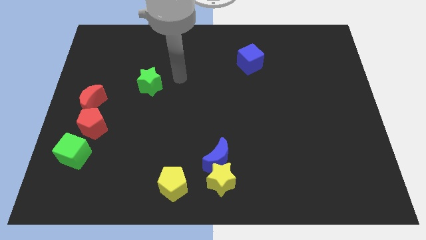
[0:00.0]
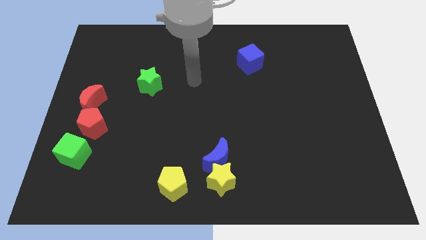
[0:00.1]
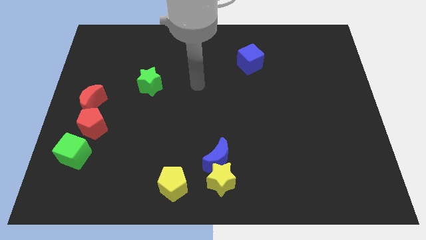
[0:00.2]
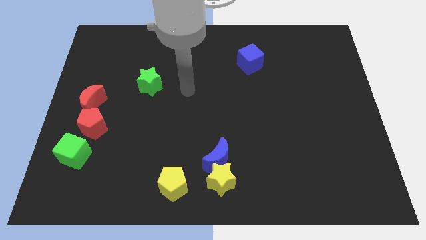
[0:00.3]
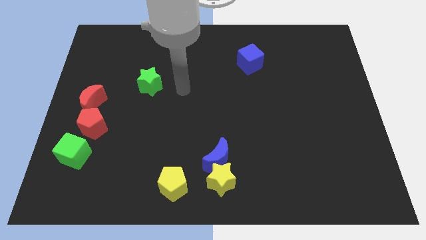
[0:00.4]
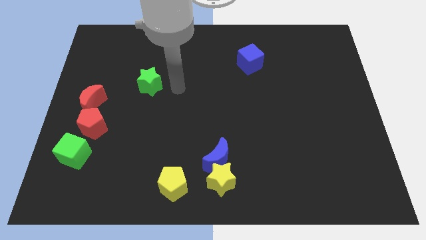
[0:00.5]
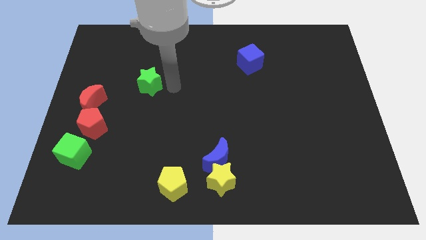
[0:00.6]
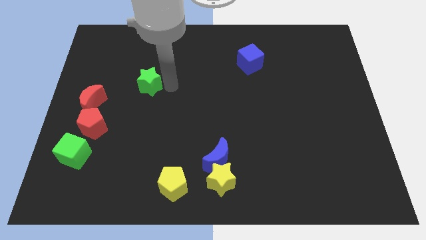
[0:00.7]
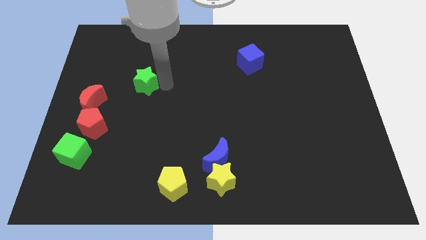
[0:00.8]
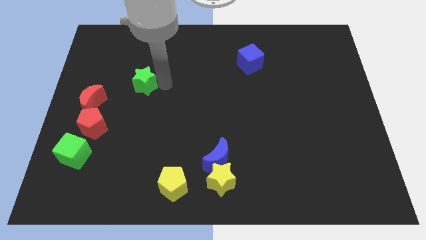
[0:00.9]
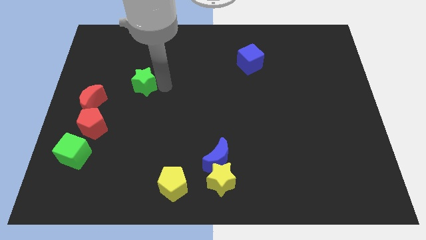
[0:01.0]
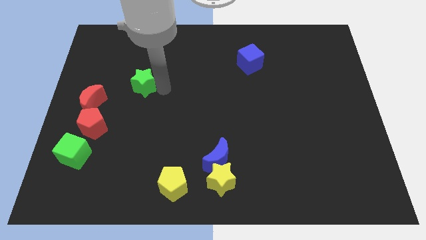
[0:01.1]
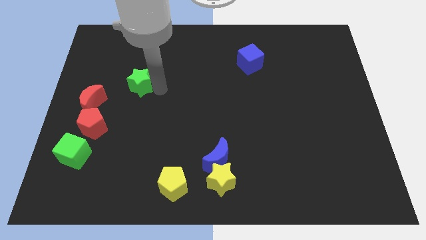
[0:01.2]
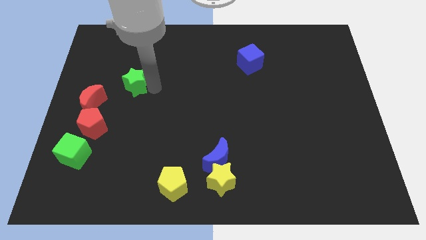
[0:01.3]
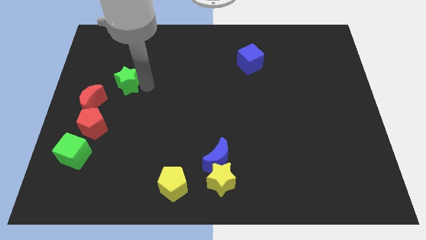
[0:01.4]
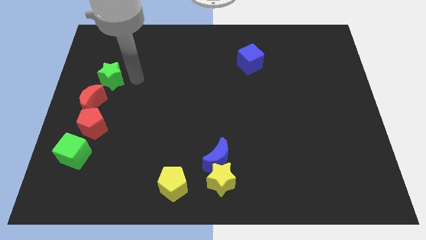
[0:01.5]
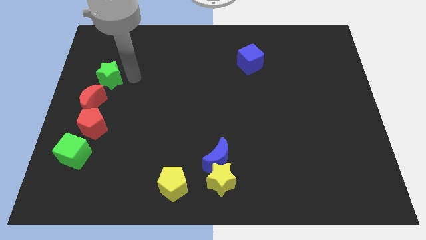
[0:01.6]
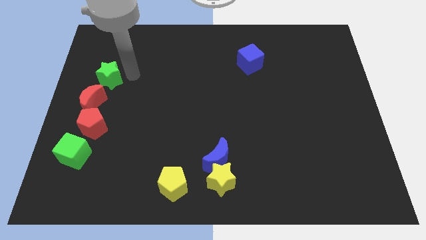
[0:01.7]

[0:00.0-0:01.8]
place green star above the red moon

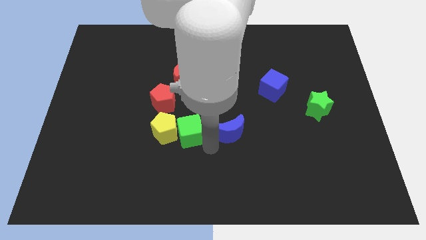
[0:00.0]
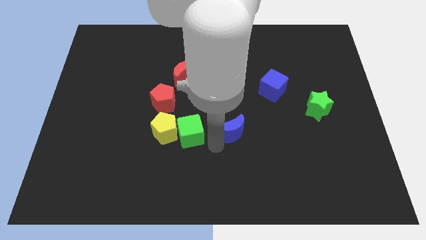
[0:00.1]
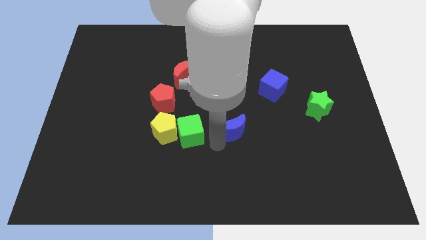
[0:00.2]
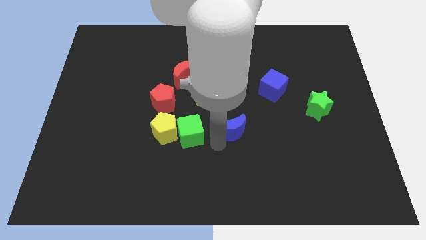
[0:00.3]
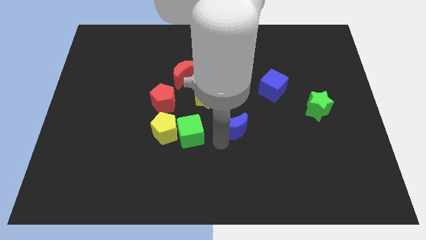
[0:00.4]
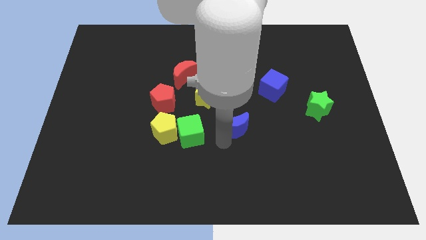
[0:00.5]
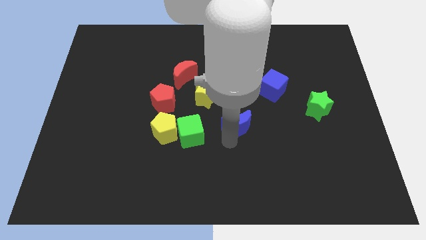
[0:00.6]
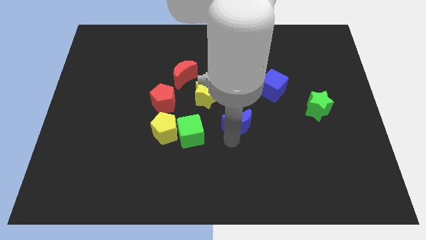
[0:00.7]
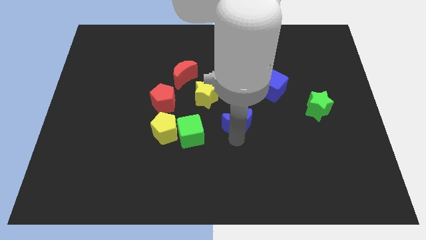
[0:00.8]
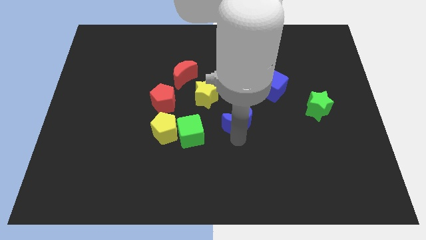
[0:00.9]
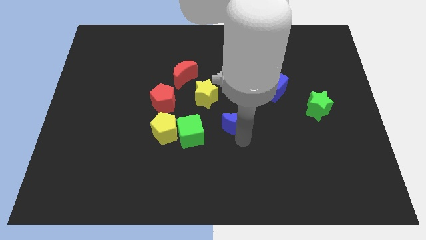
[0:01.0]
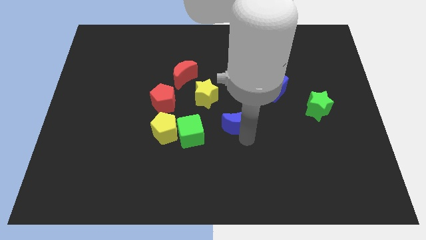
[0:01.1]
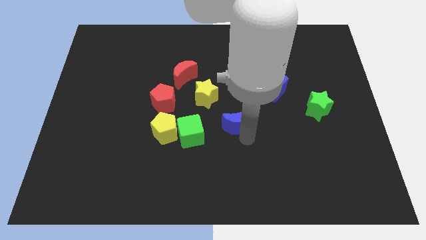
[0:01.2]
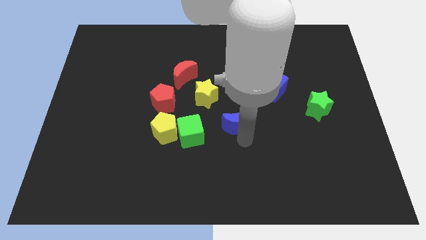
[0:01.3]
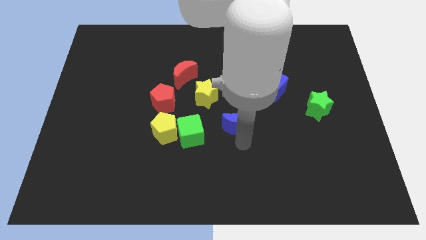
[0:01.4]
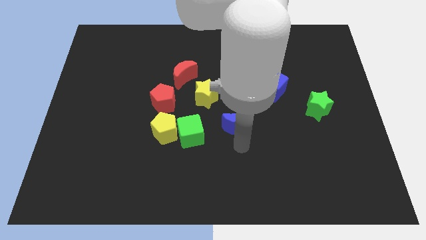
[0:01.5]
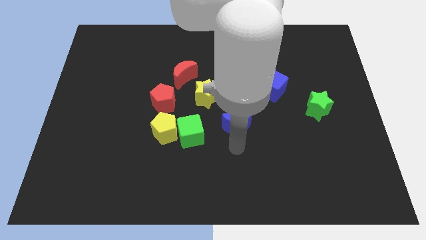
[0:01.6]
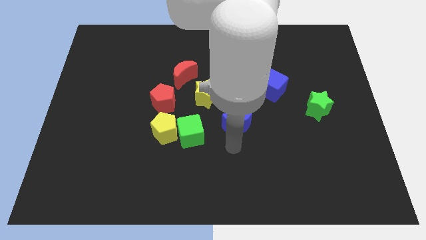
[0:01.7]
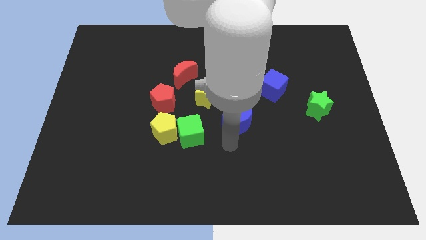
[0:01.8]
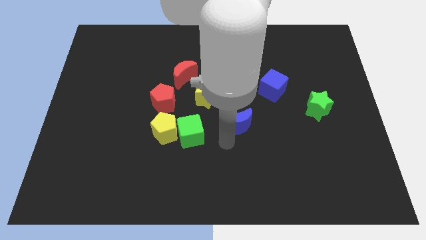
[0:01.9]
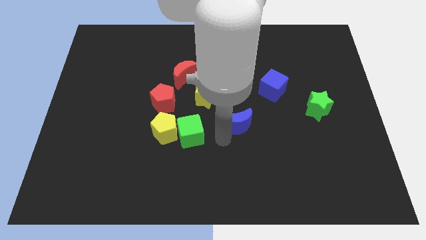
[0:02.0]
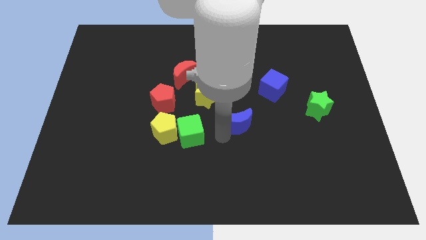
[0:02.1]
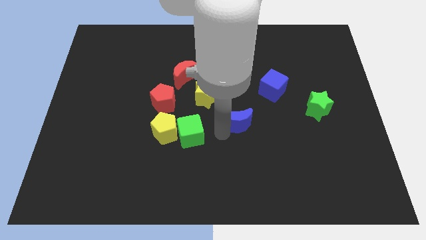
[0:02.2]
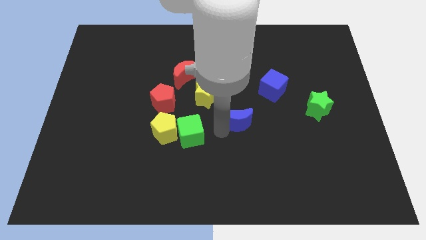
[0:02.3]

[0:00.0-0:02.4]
slightly push the blue crescent upwards

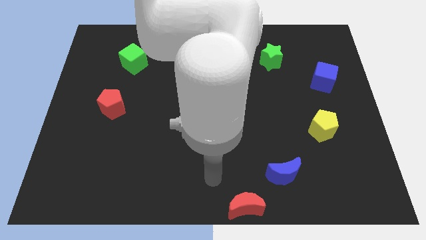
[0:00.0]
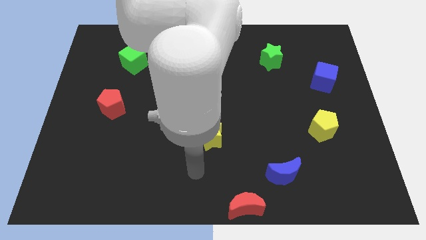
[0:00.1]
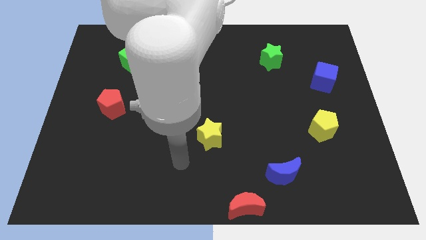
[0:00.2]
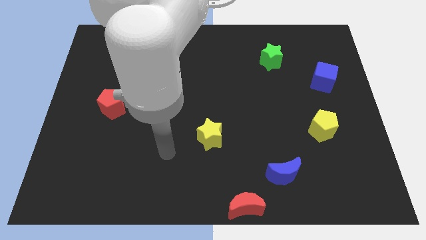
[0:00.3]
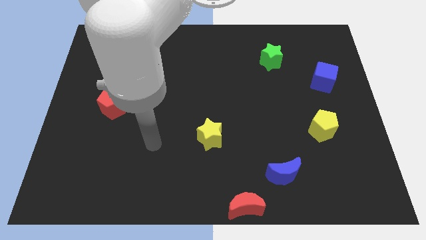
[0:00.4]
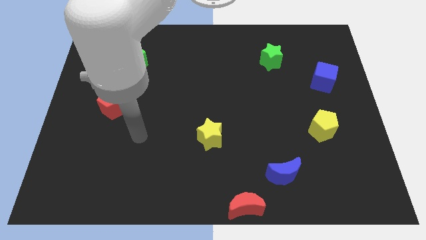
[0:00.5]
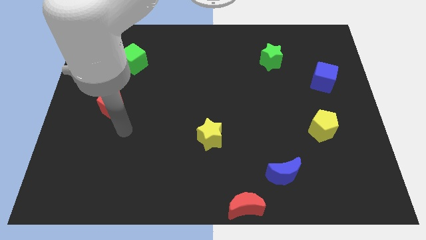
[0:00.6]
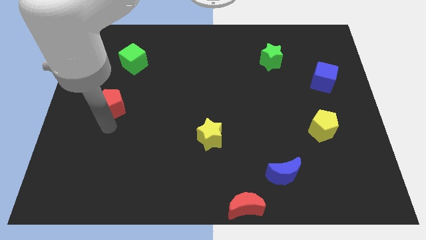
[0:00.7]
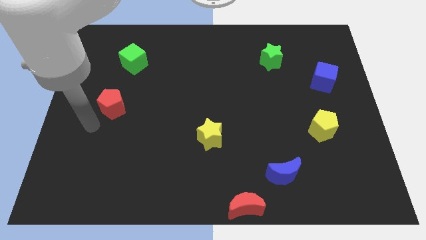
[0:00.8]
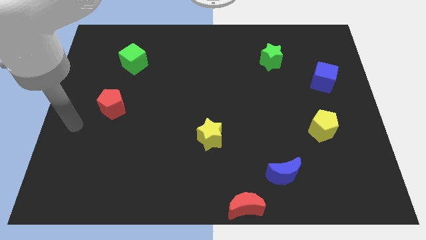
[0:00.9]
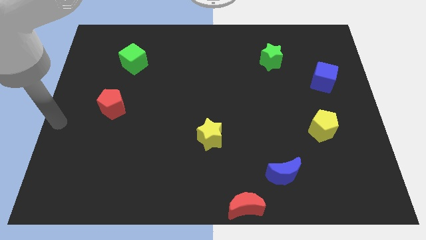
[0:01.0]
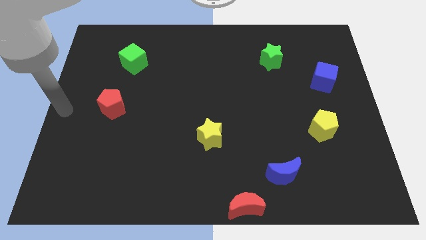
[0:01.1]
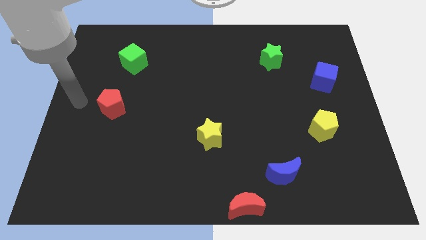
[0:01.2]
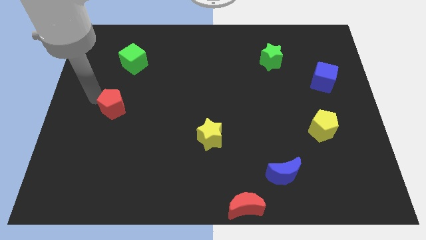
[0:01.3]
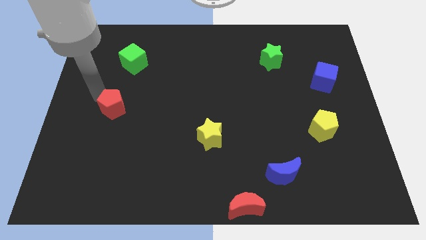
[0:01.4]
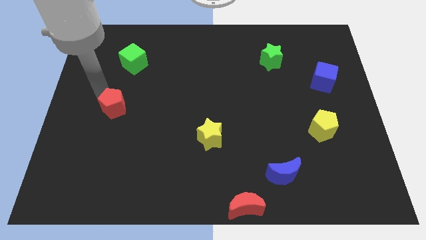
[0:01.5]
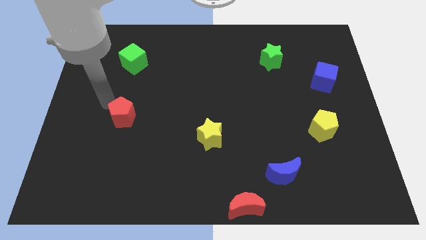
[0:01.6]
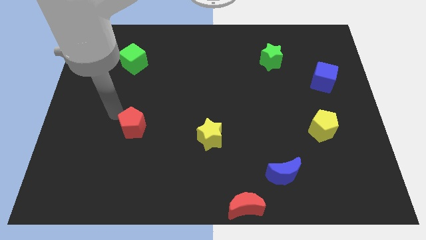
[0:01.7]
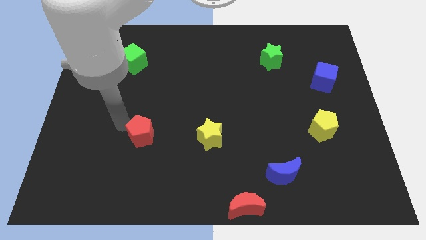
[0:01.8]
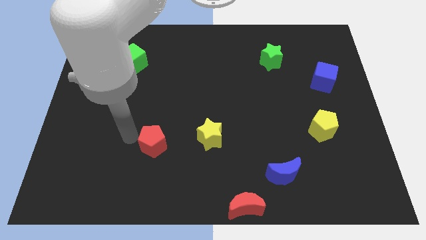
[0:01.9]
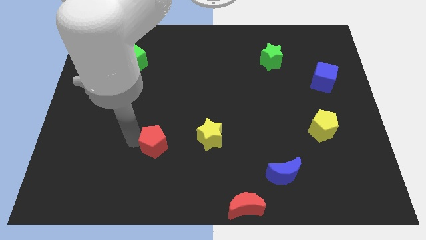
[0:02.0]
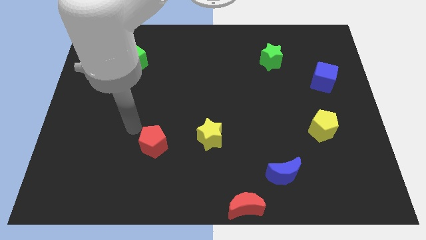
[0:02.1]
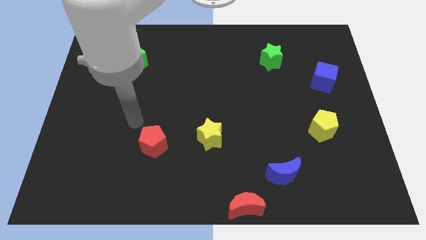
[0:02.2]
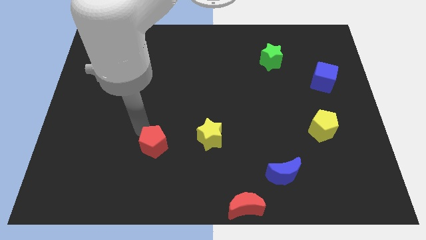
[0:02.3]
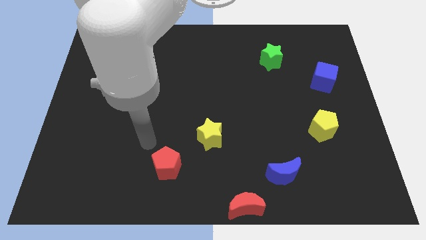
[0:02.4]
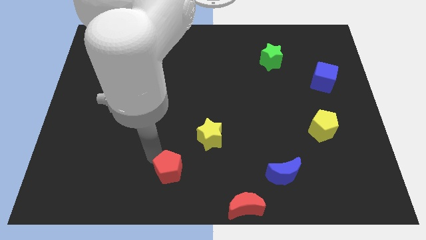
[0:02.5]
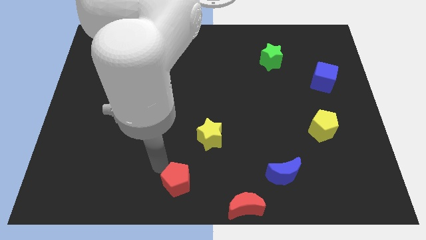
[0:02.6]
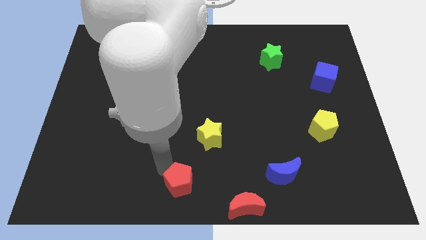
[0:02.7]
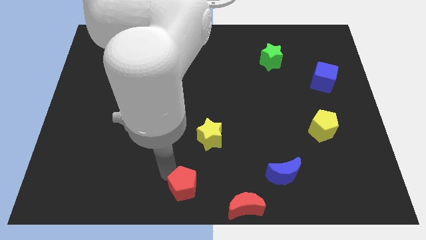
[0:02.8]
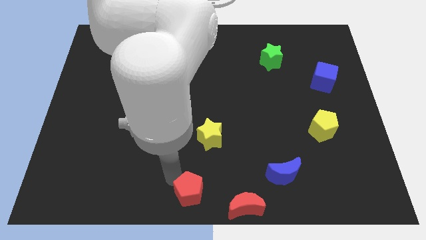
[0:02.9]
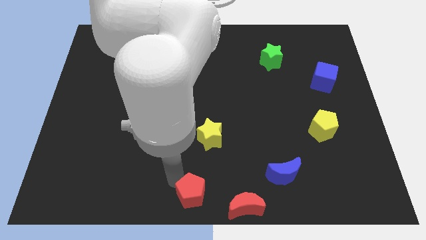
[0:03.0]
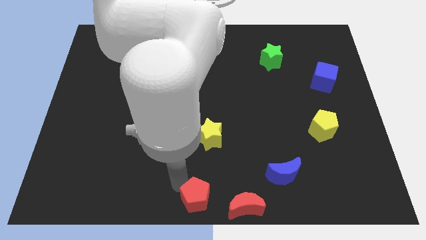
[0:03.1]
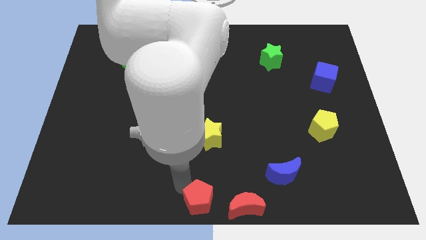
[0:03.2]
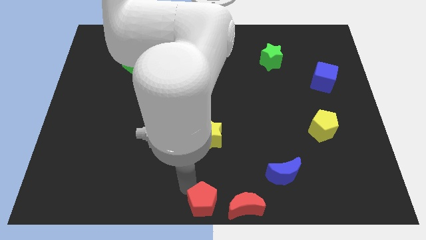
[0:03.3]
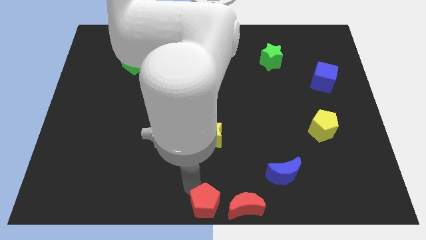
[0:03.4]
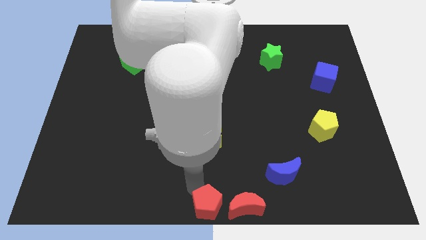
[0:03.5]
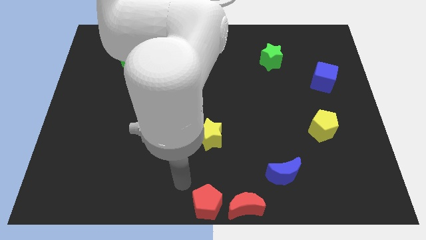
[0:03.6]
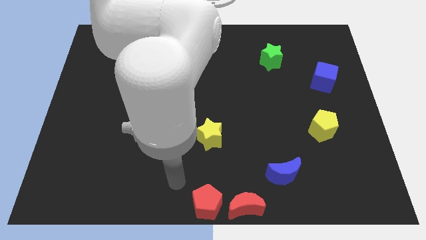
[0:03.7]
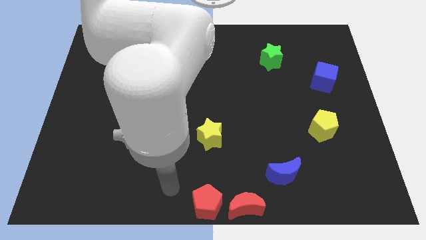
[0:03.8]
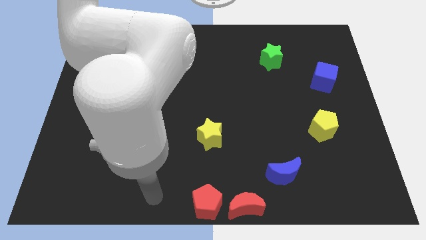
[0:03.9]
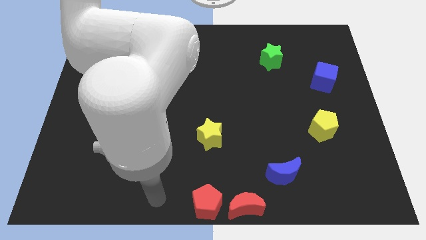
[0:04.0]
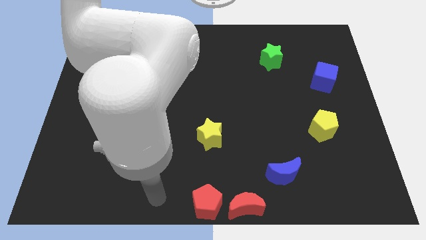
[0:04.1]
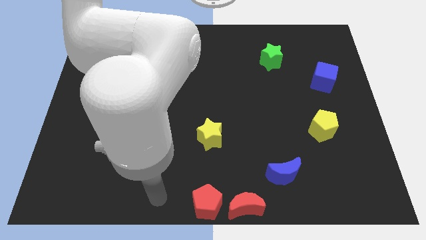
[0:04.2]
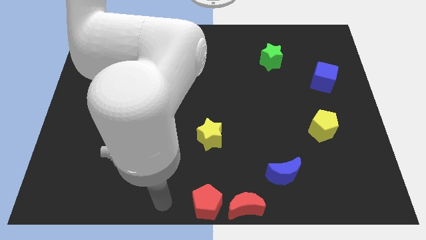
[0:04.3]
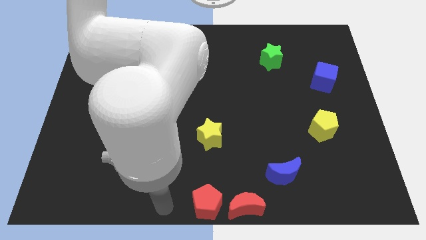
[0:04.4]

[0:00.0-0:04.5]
place the red pentagon below the yellow star

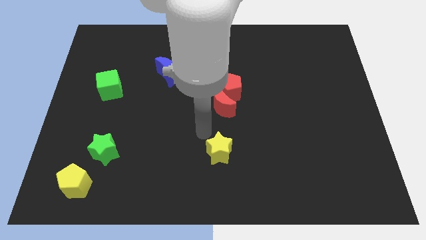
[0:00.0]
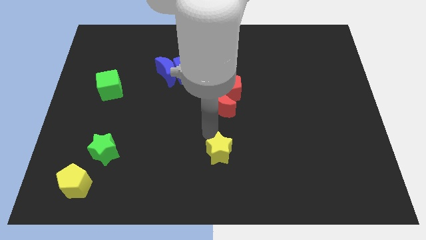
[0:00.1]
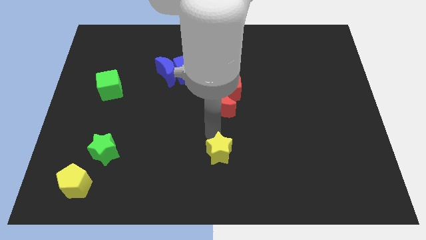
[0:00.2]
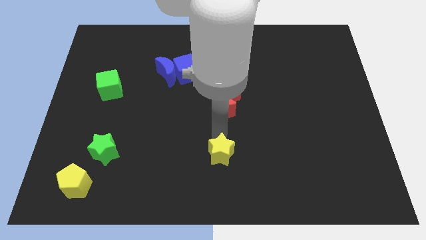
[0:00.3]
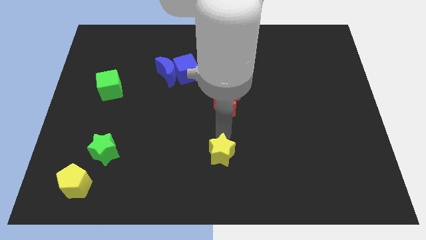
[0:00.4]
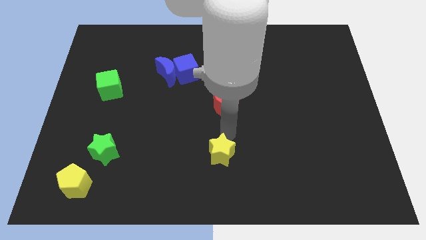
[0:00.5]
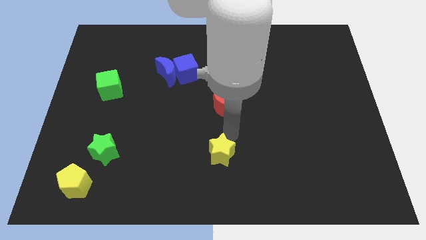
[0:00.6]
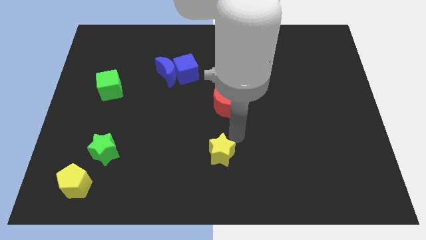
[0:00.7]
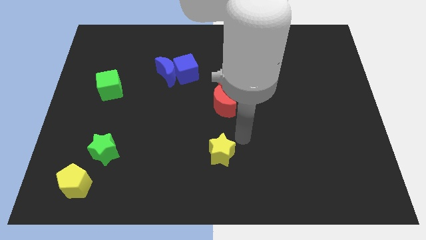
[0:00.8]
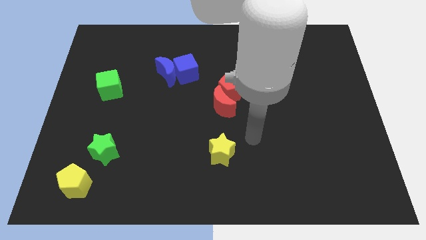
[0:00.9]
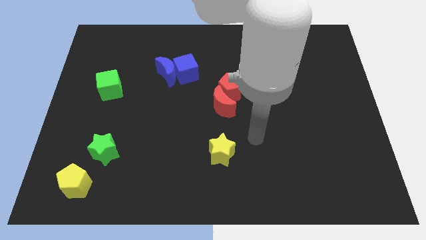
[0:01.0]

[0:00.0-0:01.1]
push the yellow star slightly
